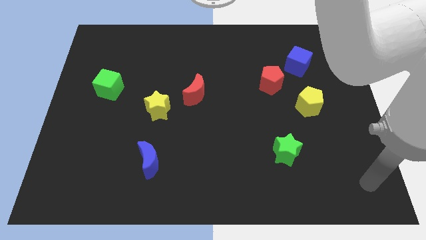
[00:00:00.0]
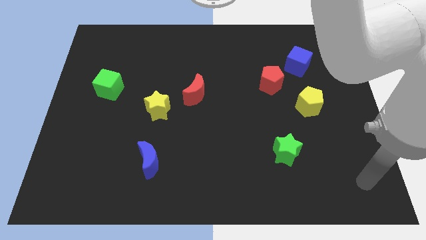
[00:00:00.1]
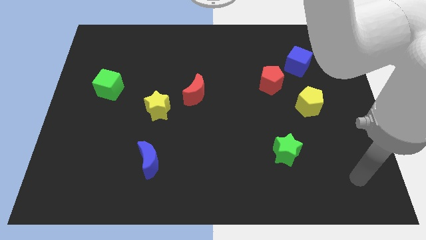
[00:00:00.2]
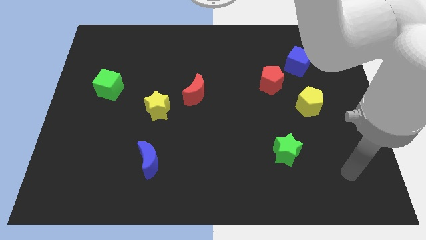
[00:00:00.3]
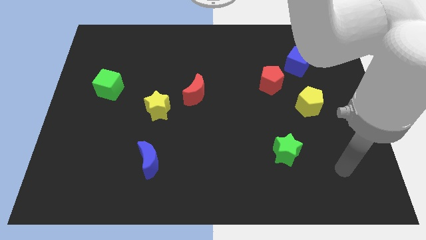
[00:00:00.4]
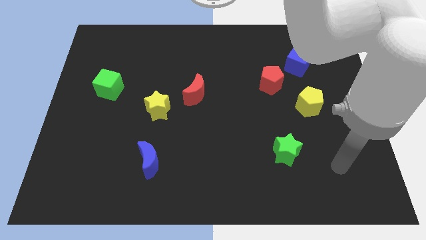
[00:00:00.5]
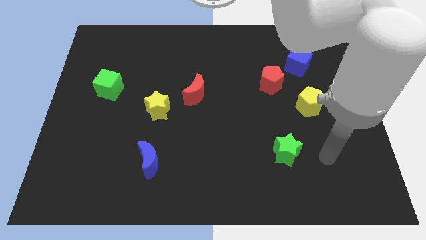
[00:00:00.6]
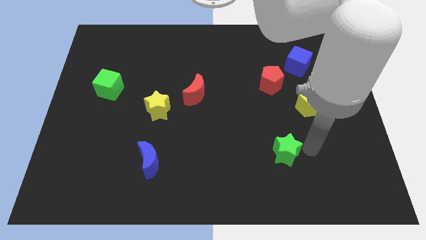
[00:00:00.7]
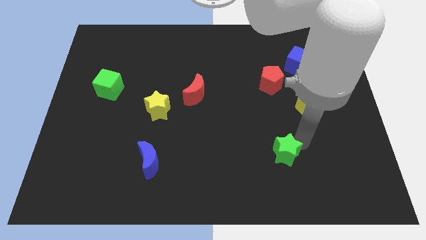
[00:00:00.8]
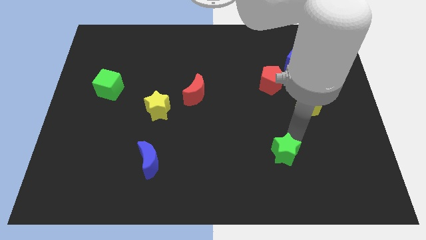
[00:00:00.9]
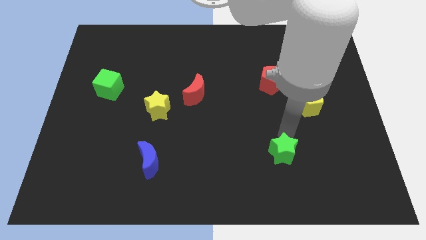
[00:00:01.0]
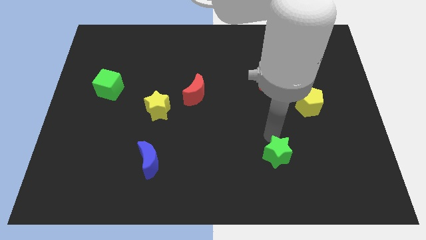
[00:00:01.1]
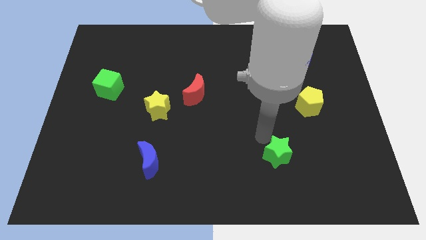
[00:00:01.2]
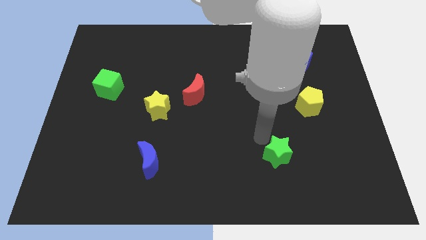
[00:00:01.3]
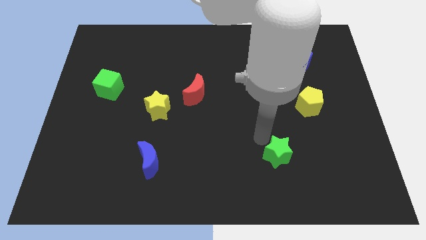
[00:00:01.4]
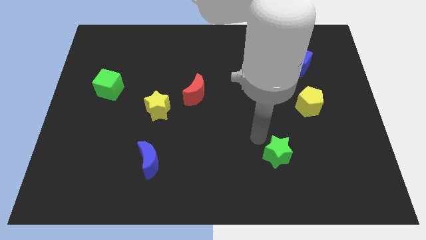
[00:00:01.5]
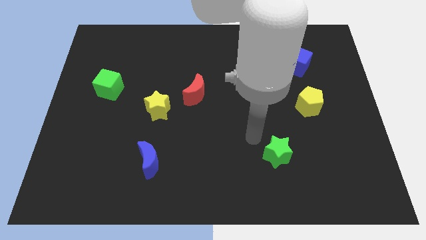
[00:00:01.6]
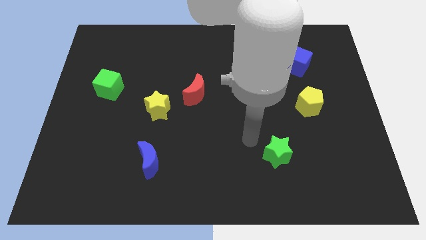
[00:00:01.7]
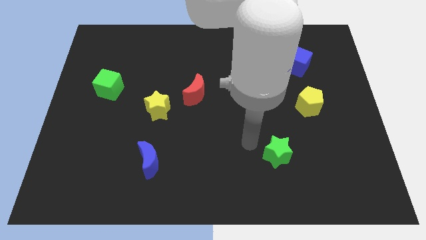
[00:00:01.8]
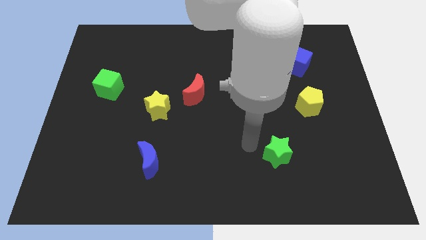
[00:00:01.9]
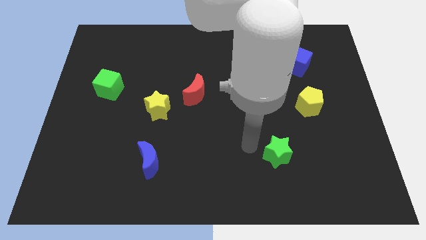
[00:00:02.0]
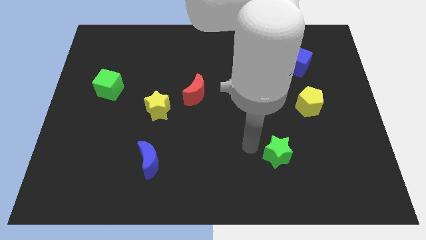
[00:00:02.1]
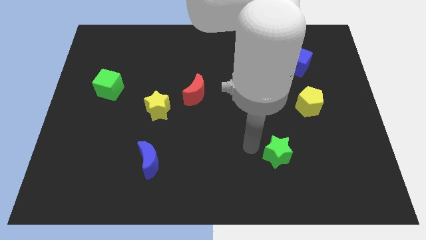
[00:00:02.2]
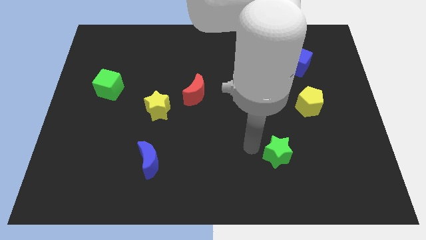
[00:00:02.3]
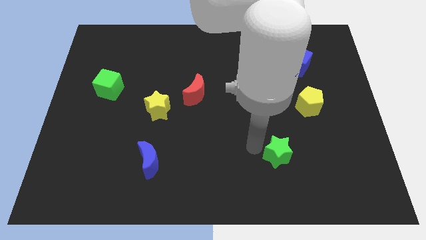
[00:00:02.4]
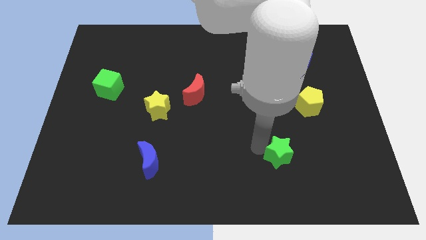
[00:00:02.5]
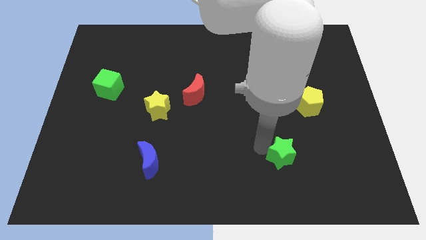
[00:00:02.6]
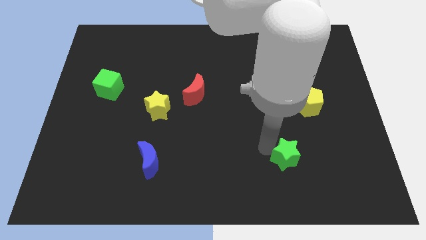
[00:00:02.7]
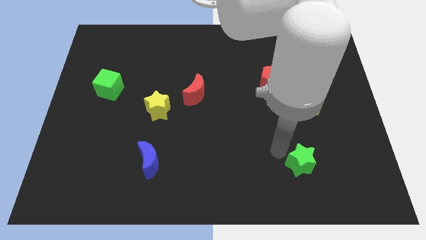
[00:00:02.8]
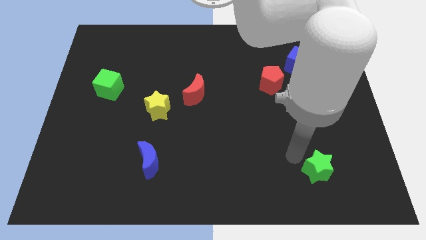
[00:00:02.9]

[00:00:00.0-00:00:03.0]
push the green star horizontally left to the blue crescent

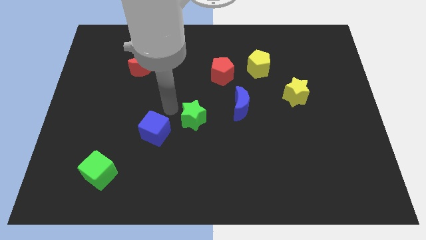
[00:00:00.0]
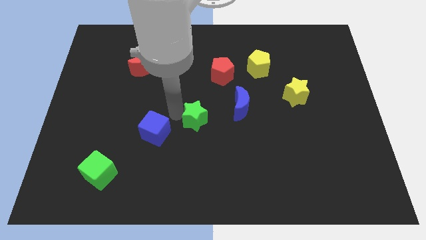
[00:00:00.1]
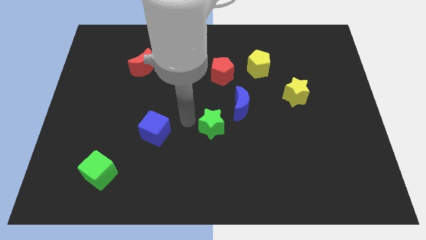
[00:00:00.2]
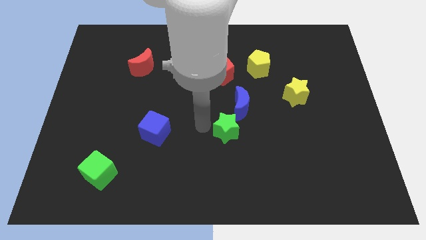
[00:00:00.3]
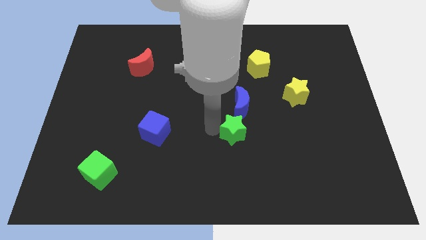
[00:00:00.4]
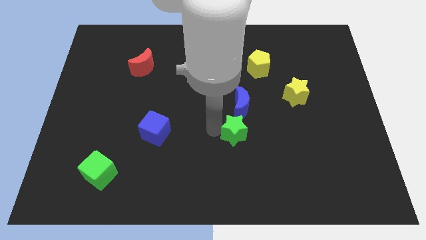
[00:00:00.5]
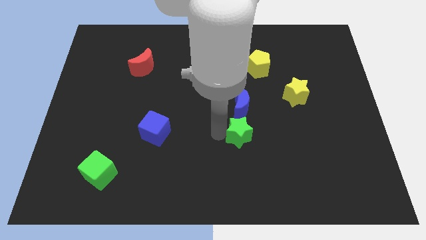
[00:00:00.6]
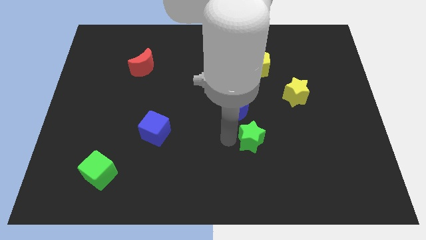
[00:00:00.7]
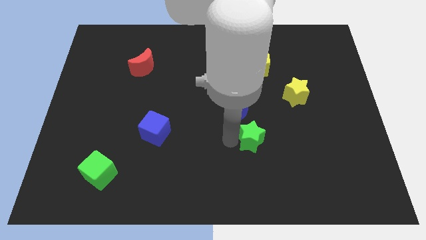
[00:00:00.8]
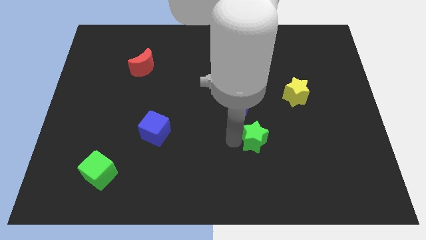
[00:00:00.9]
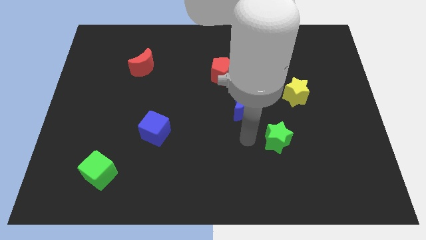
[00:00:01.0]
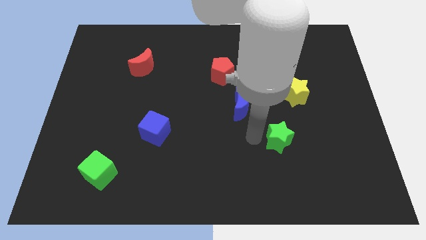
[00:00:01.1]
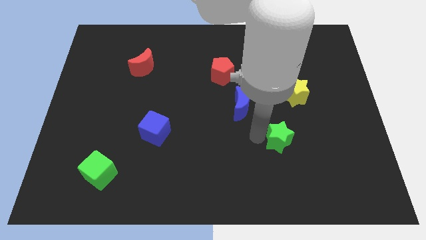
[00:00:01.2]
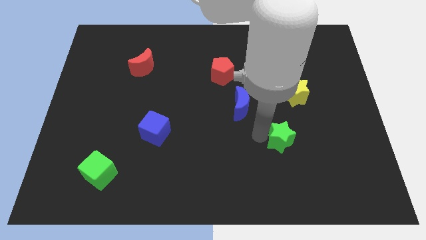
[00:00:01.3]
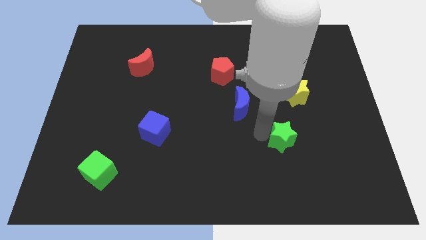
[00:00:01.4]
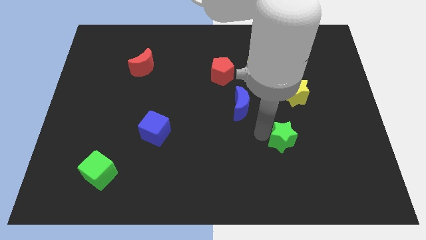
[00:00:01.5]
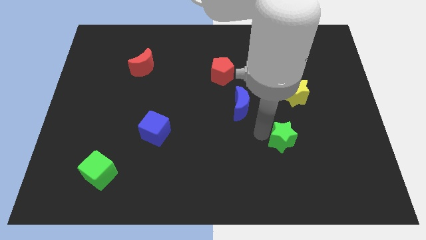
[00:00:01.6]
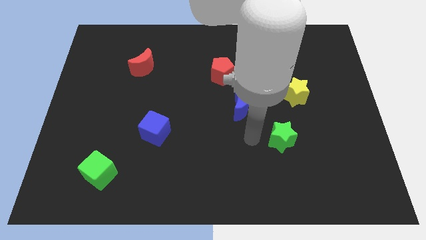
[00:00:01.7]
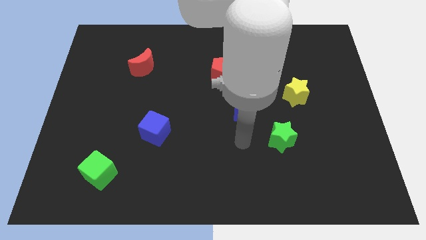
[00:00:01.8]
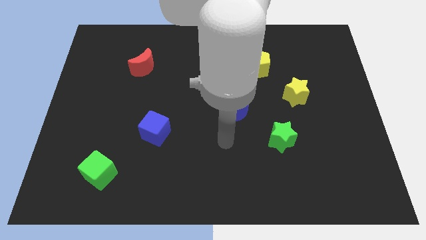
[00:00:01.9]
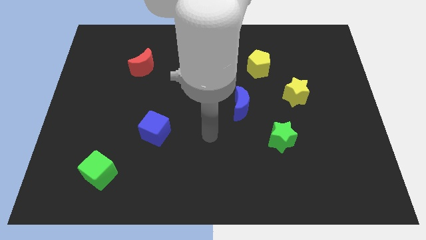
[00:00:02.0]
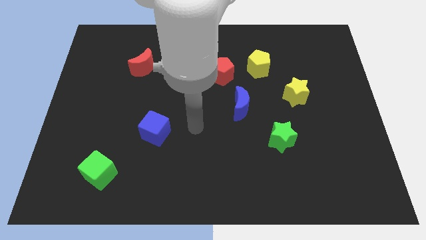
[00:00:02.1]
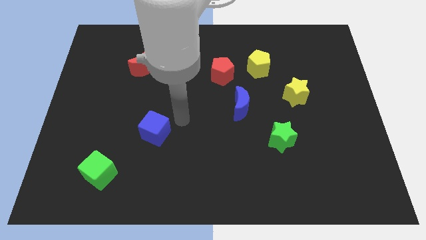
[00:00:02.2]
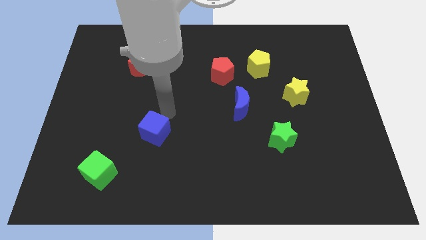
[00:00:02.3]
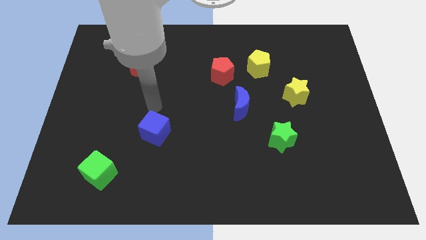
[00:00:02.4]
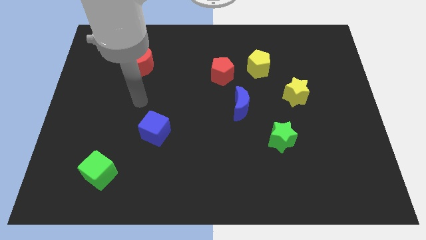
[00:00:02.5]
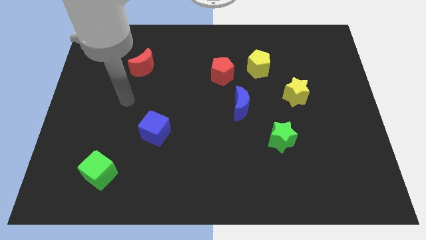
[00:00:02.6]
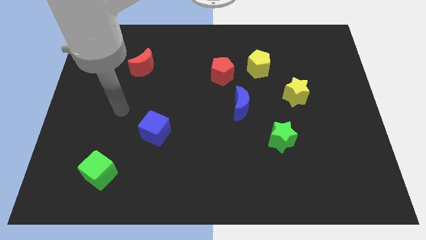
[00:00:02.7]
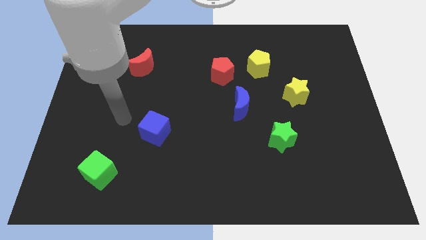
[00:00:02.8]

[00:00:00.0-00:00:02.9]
push the green star towards the bottom of yellow star on the board

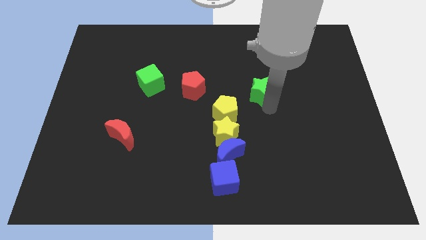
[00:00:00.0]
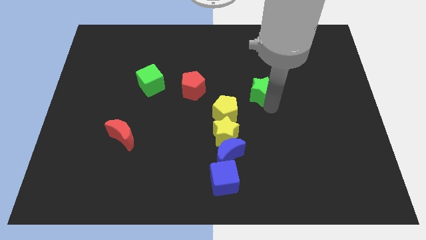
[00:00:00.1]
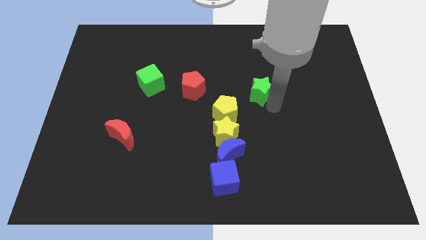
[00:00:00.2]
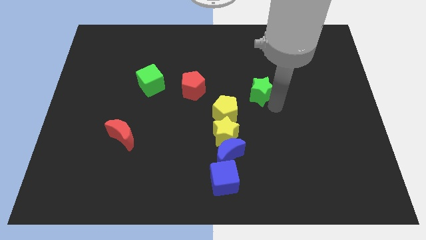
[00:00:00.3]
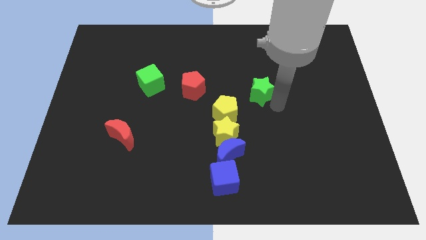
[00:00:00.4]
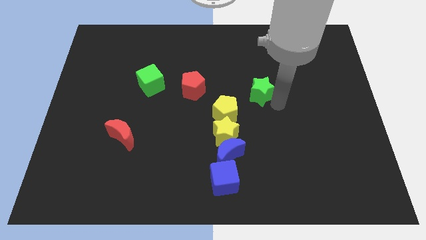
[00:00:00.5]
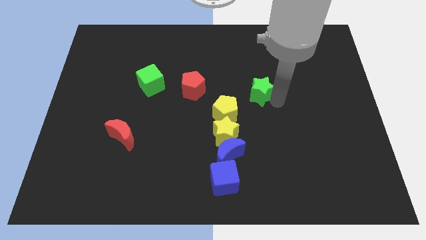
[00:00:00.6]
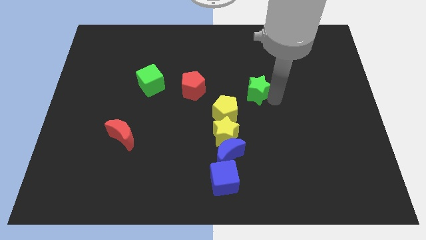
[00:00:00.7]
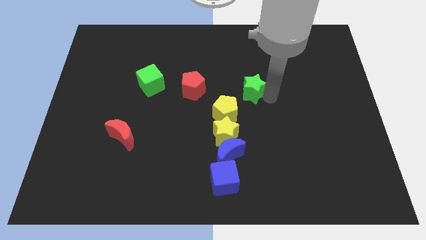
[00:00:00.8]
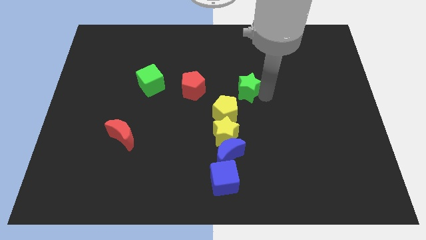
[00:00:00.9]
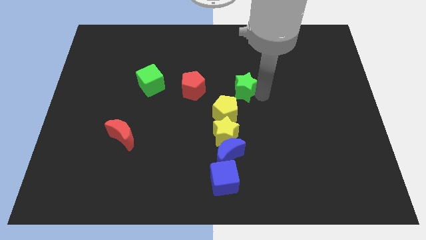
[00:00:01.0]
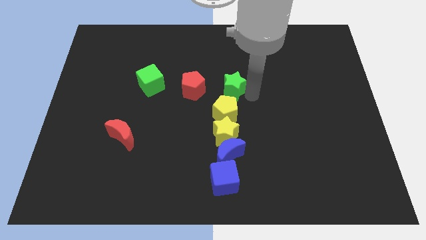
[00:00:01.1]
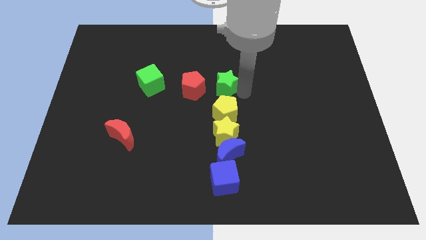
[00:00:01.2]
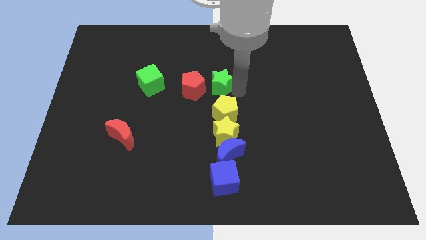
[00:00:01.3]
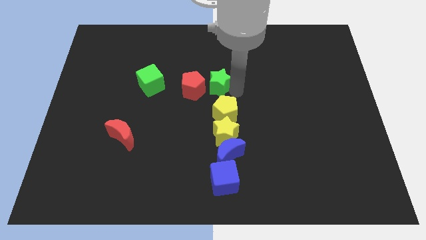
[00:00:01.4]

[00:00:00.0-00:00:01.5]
push the green star to the top right of the yellow pentagon

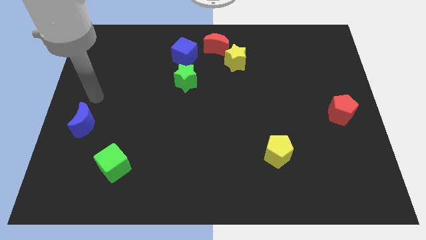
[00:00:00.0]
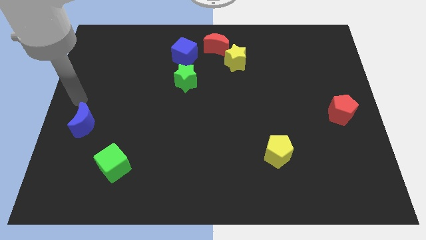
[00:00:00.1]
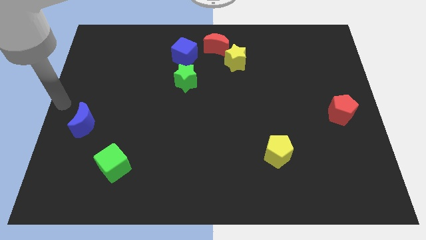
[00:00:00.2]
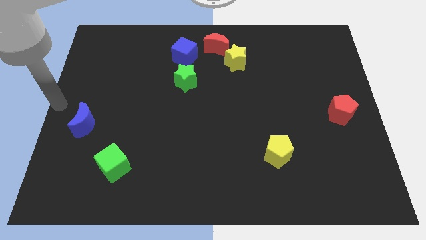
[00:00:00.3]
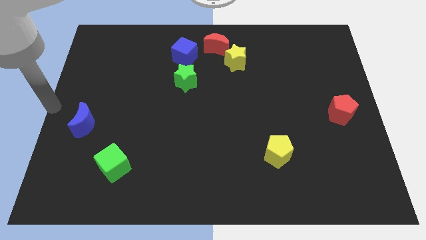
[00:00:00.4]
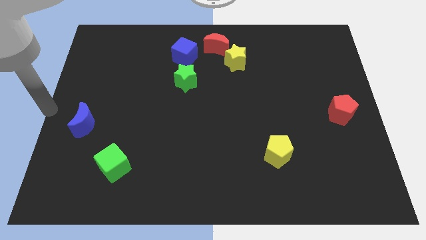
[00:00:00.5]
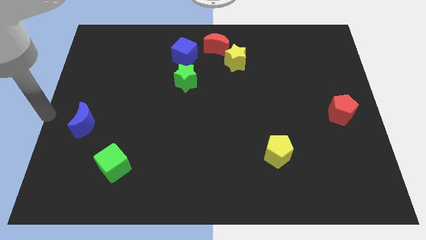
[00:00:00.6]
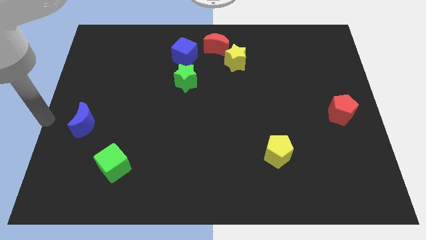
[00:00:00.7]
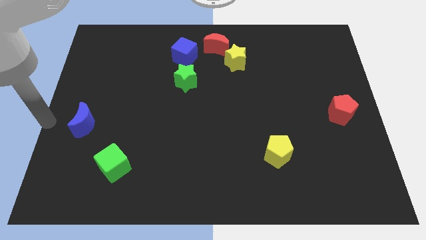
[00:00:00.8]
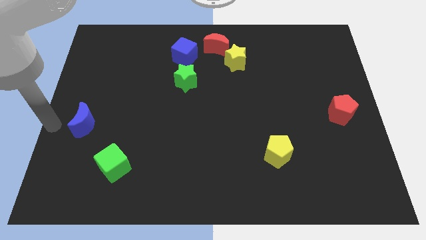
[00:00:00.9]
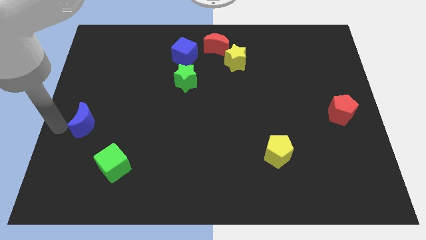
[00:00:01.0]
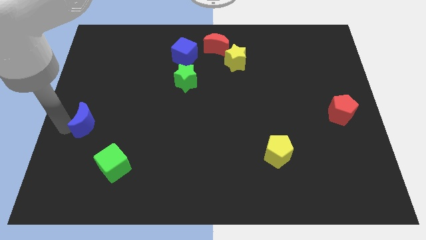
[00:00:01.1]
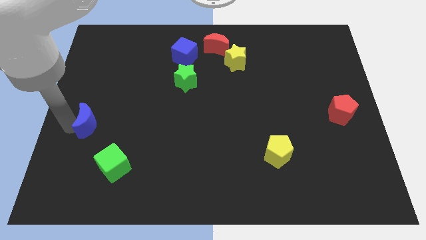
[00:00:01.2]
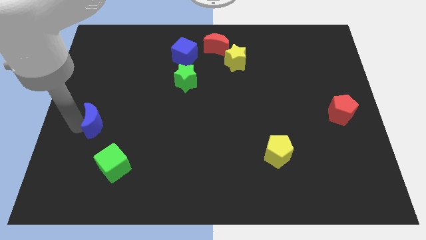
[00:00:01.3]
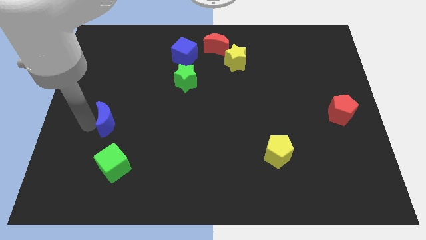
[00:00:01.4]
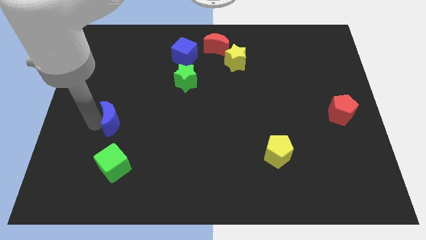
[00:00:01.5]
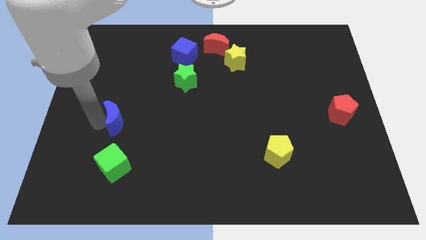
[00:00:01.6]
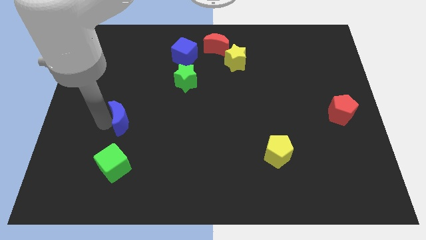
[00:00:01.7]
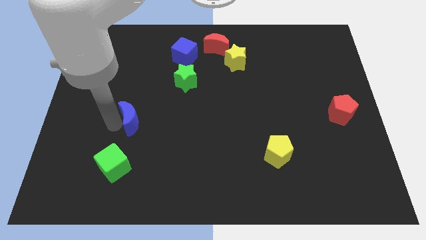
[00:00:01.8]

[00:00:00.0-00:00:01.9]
place blue moon to the top of green cube
